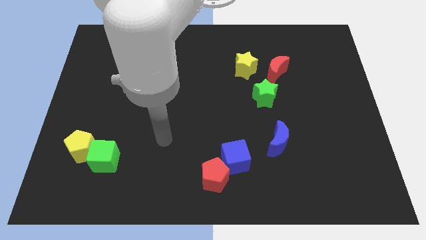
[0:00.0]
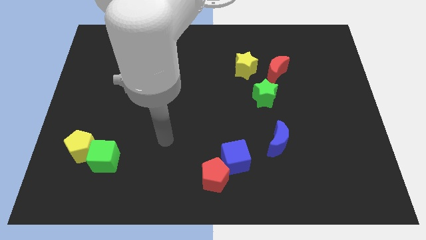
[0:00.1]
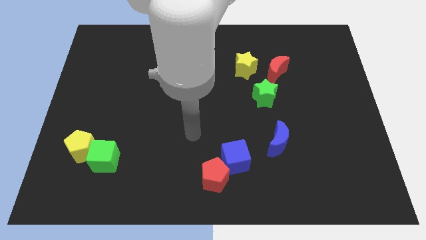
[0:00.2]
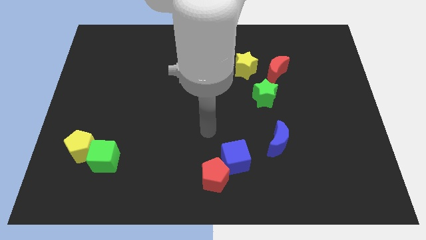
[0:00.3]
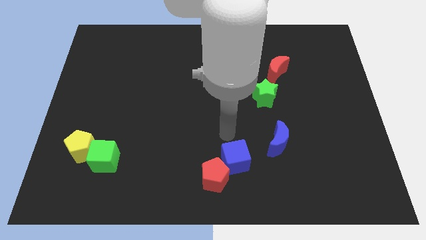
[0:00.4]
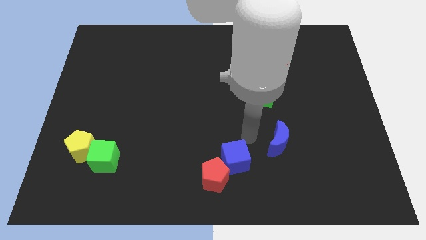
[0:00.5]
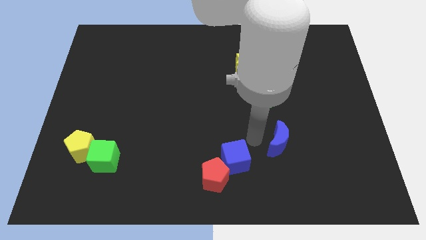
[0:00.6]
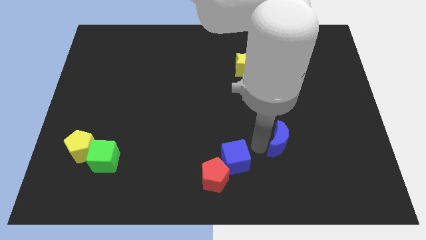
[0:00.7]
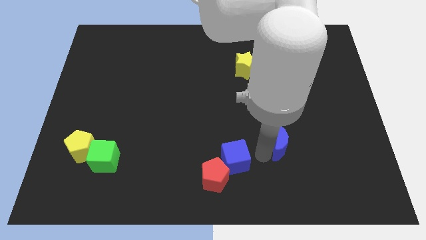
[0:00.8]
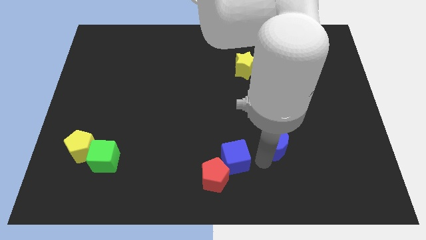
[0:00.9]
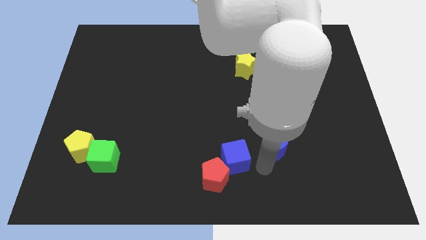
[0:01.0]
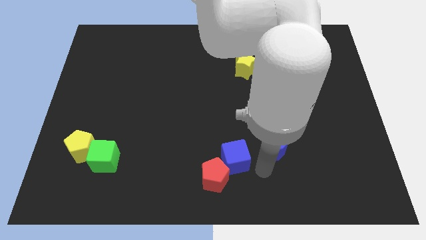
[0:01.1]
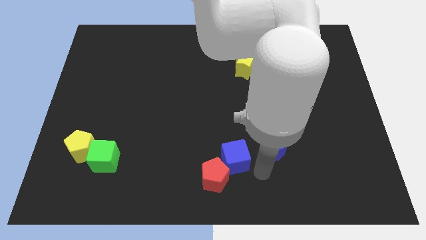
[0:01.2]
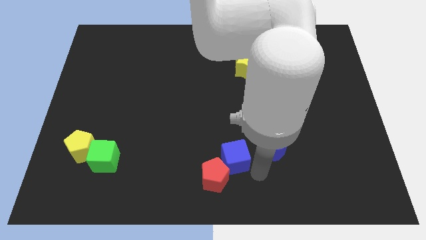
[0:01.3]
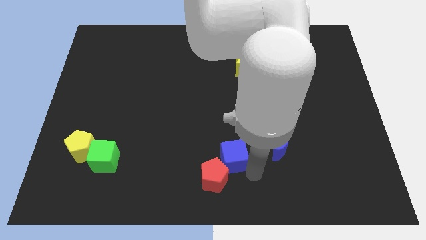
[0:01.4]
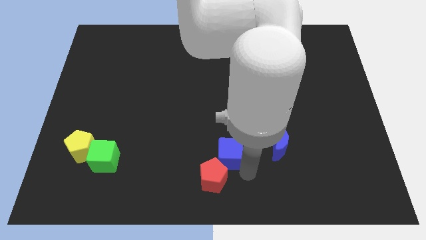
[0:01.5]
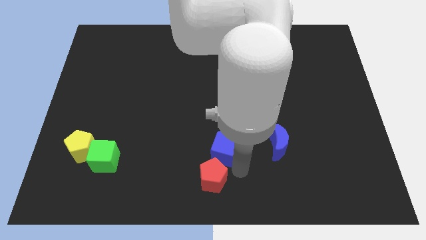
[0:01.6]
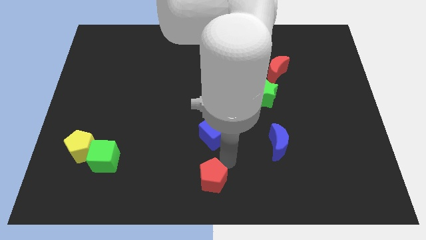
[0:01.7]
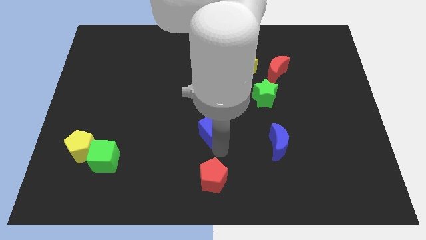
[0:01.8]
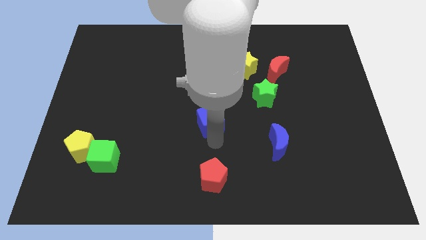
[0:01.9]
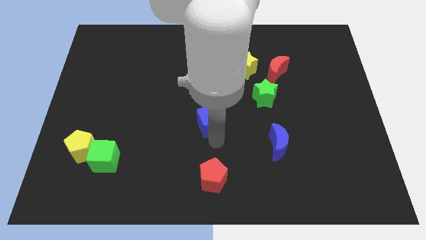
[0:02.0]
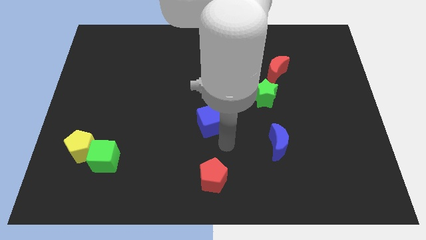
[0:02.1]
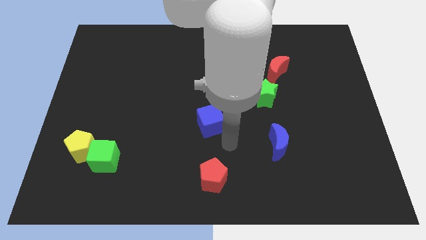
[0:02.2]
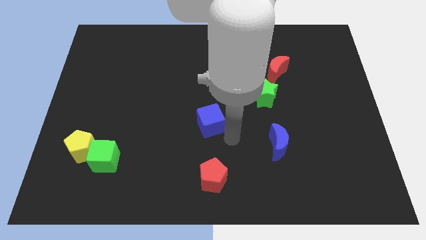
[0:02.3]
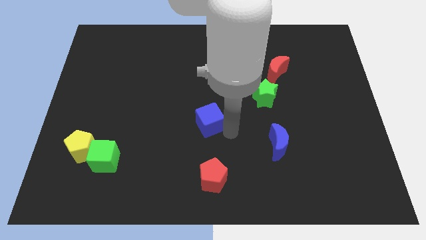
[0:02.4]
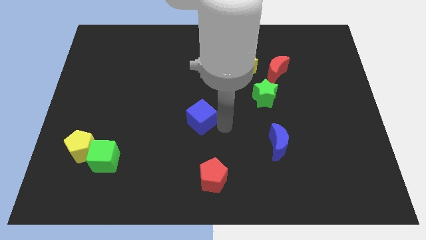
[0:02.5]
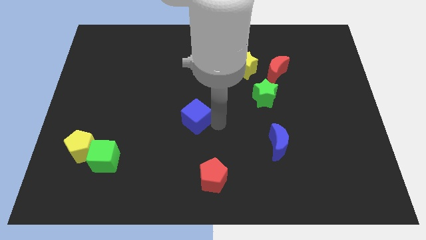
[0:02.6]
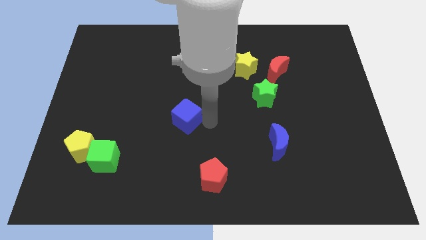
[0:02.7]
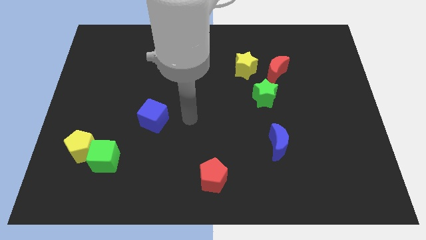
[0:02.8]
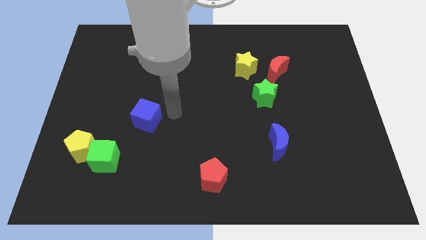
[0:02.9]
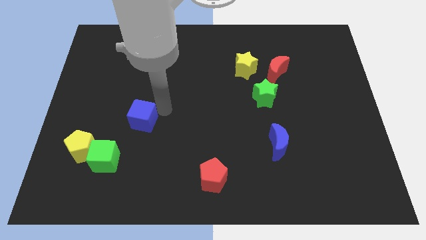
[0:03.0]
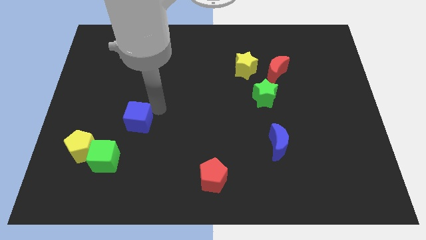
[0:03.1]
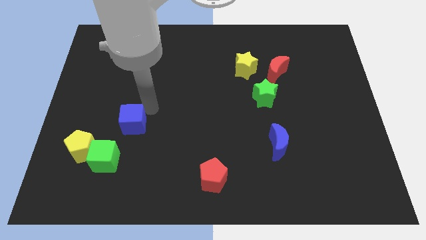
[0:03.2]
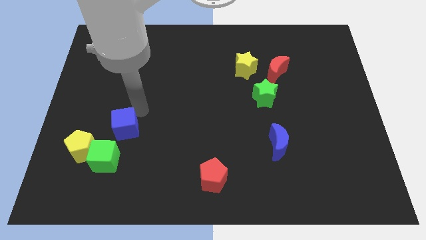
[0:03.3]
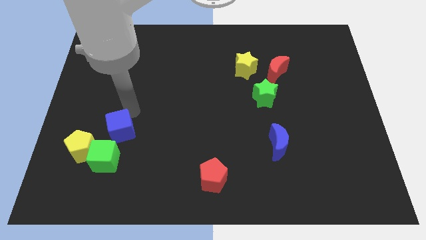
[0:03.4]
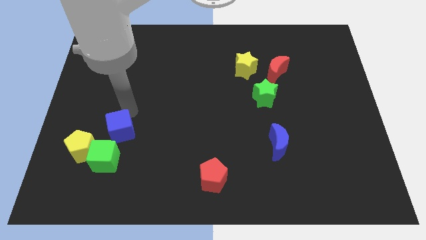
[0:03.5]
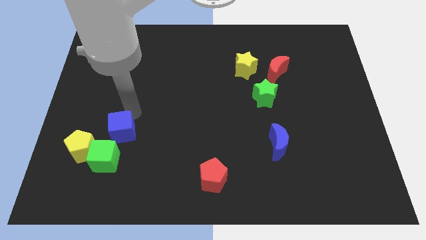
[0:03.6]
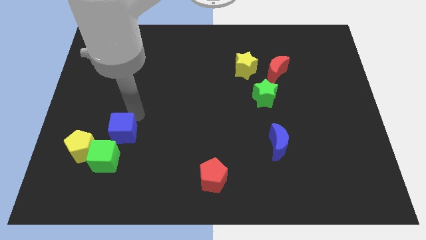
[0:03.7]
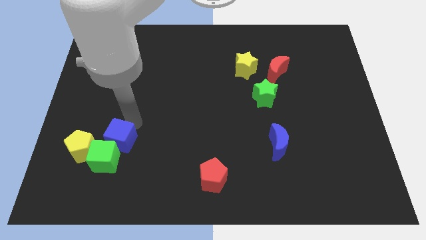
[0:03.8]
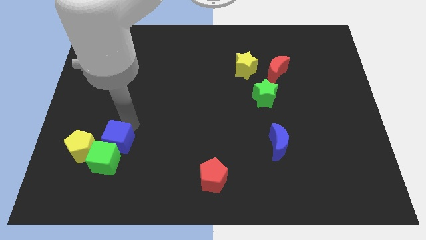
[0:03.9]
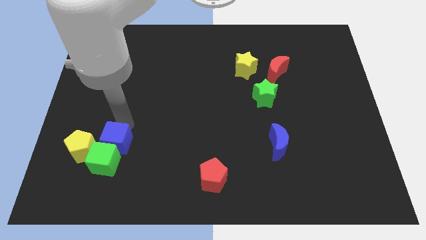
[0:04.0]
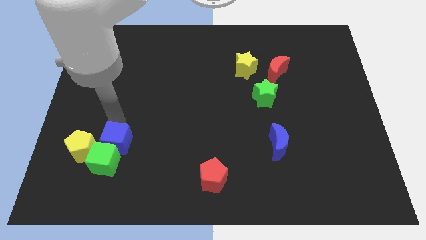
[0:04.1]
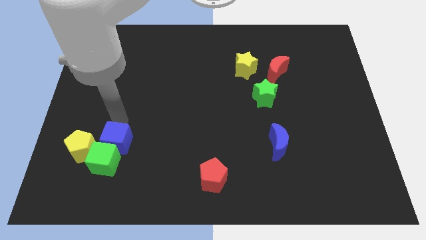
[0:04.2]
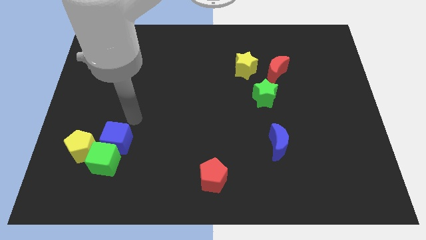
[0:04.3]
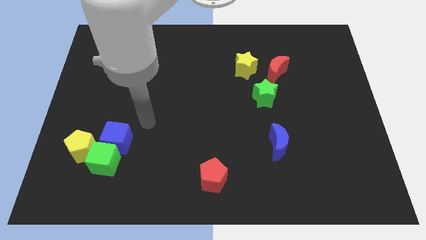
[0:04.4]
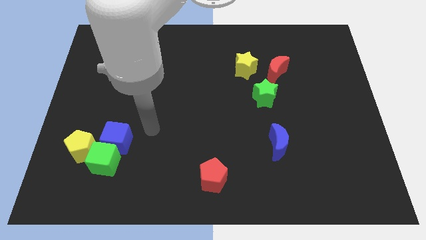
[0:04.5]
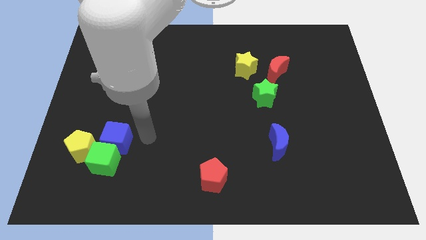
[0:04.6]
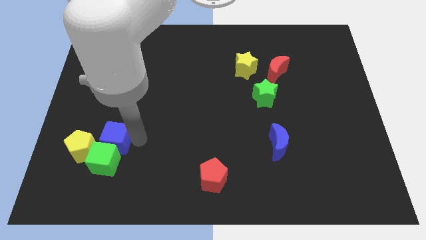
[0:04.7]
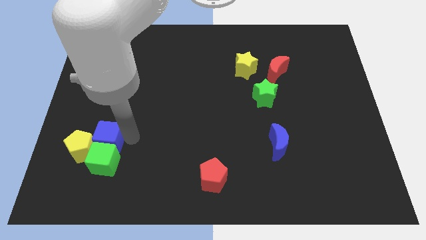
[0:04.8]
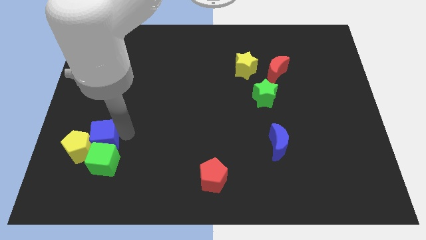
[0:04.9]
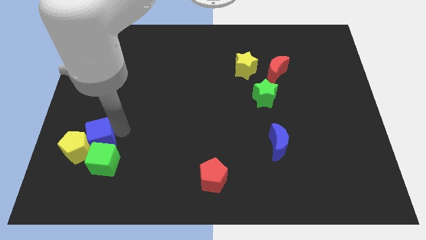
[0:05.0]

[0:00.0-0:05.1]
push the blue cube to the yellow pentagon

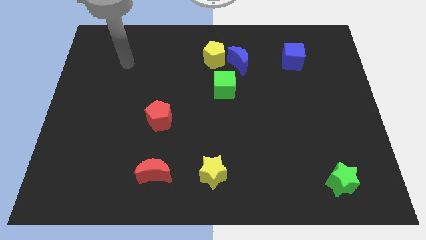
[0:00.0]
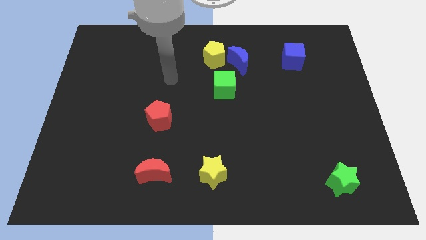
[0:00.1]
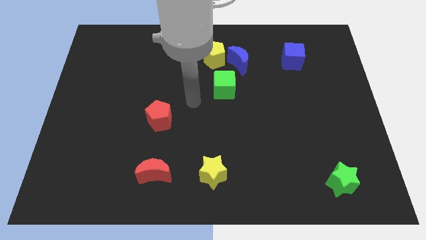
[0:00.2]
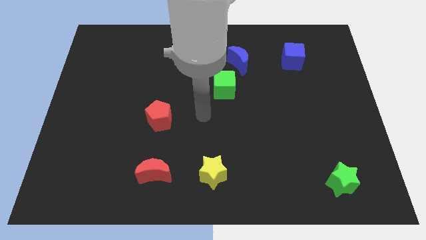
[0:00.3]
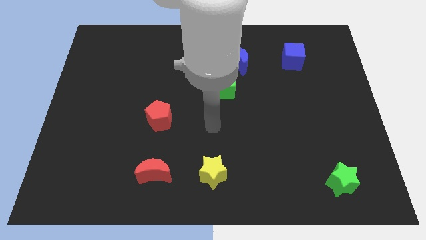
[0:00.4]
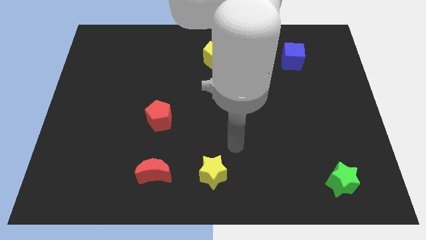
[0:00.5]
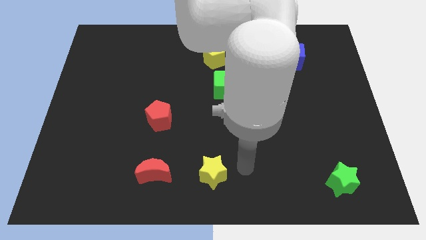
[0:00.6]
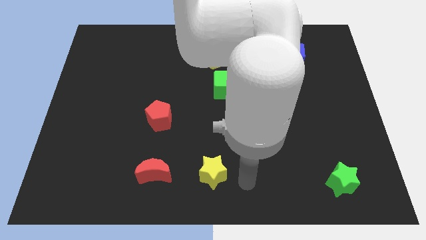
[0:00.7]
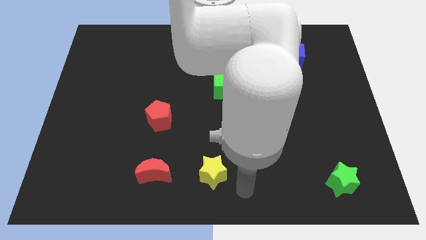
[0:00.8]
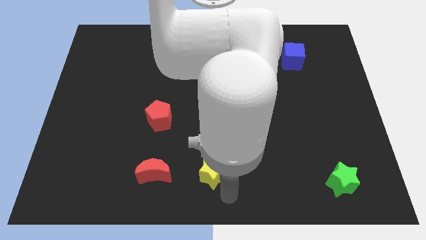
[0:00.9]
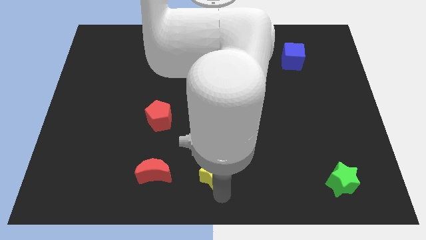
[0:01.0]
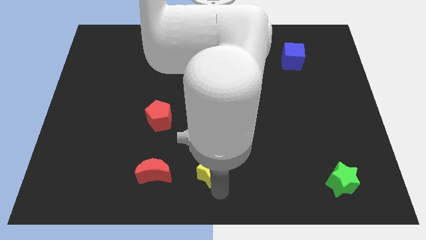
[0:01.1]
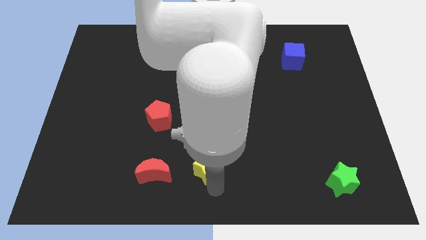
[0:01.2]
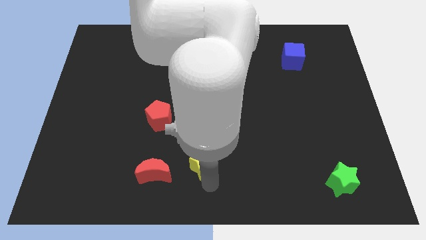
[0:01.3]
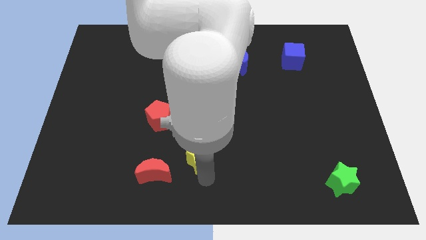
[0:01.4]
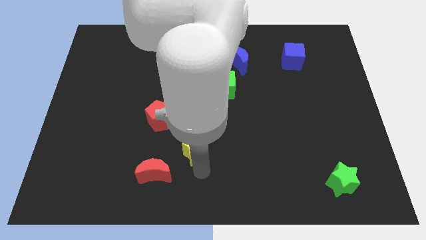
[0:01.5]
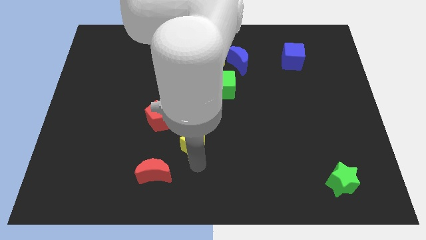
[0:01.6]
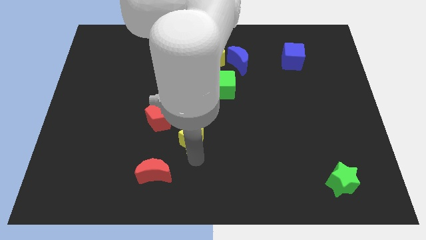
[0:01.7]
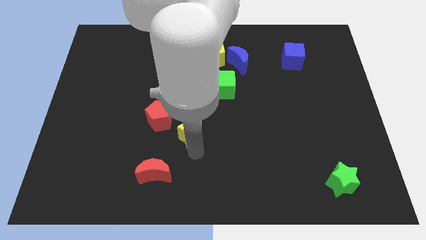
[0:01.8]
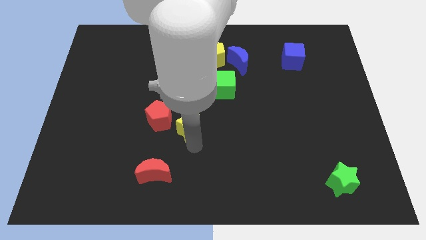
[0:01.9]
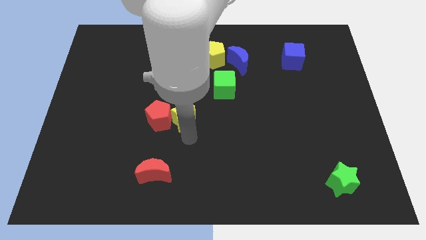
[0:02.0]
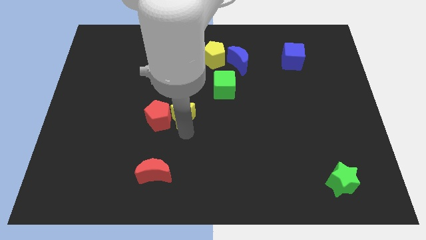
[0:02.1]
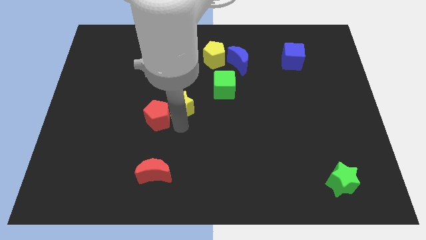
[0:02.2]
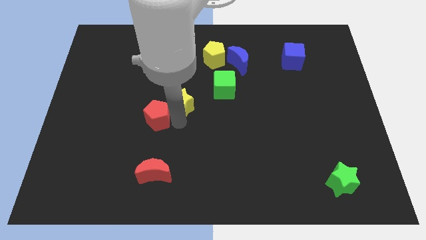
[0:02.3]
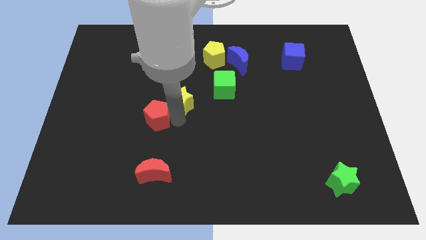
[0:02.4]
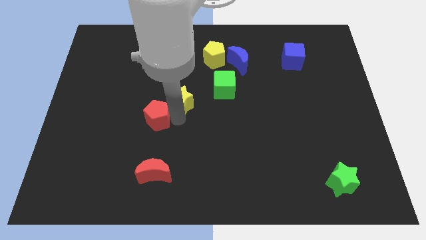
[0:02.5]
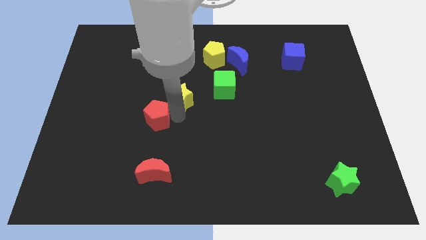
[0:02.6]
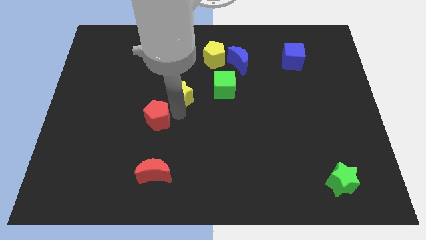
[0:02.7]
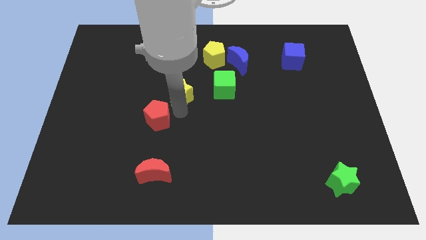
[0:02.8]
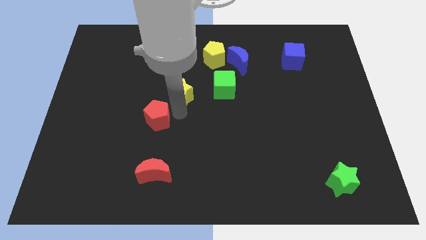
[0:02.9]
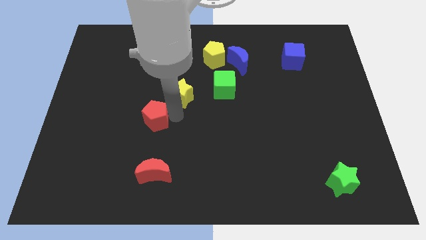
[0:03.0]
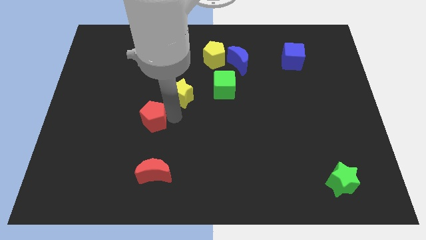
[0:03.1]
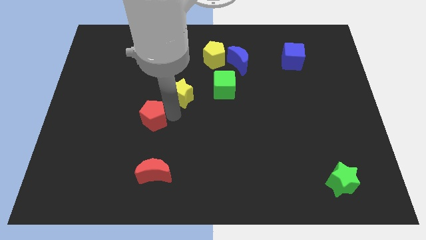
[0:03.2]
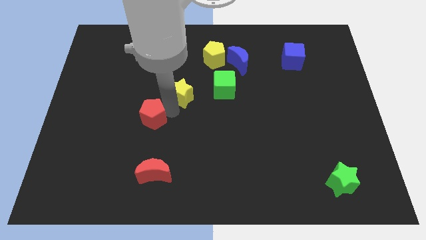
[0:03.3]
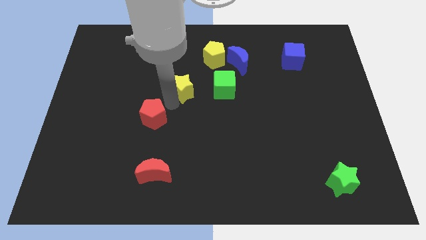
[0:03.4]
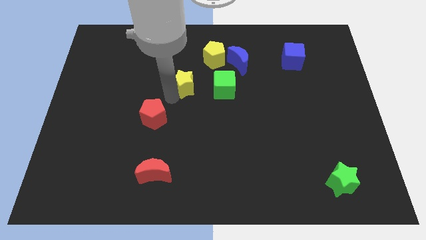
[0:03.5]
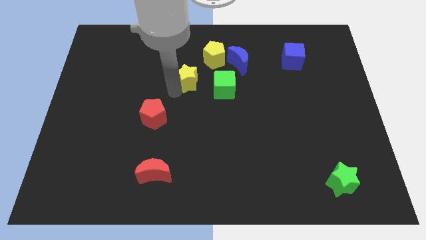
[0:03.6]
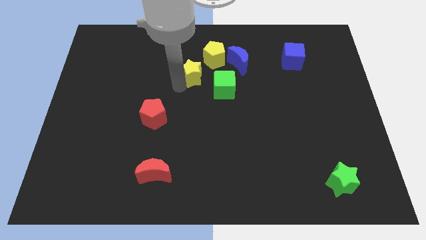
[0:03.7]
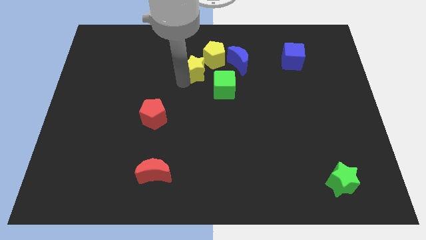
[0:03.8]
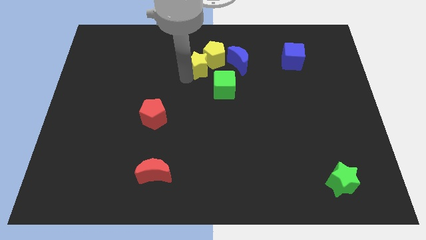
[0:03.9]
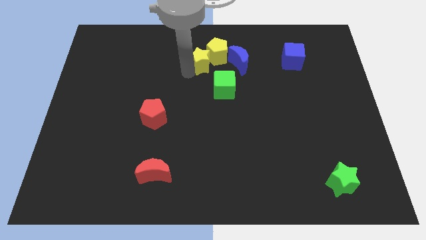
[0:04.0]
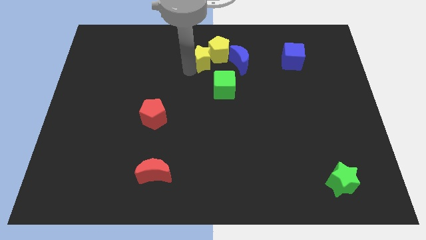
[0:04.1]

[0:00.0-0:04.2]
move the yellow star towards the yellow pentagon
